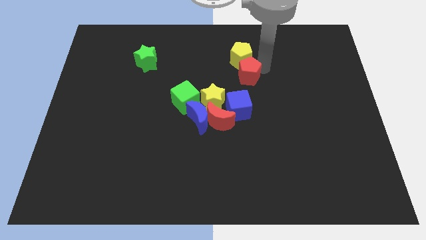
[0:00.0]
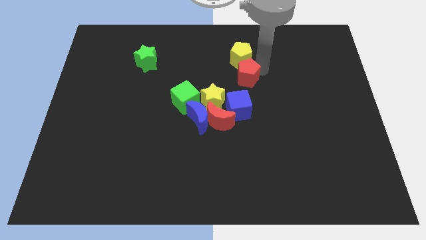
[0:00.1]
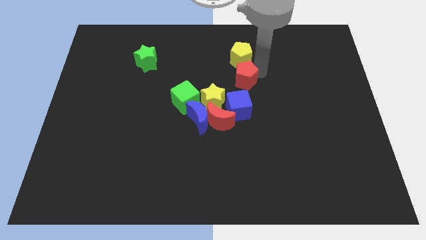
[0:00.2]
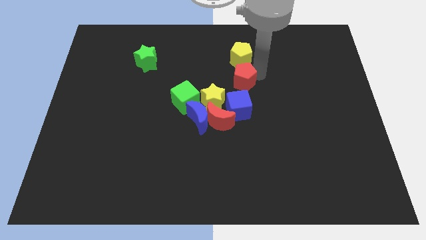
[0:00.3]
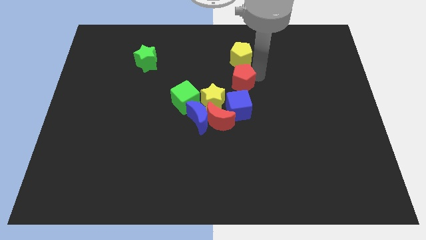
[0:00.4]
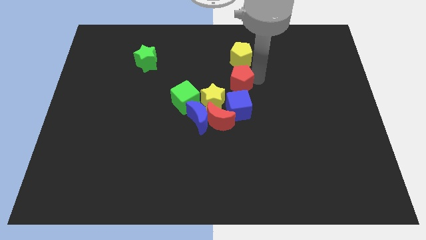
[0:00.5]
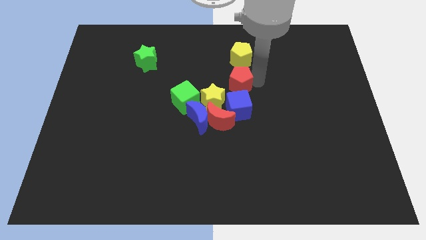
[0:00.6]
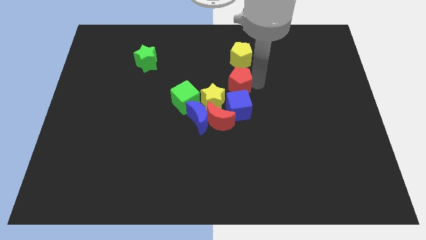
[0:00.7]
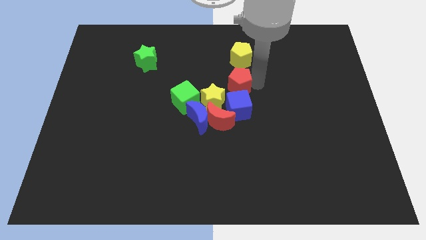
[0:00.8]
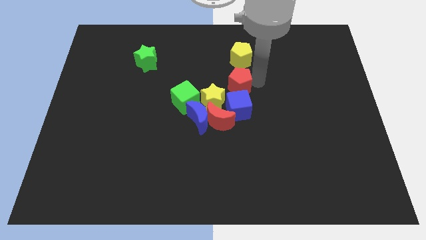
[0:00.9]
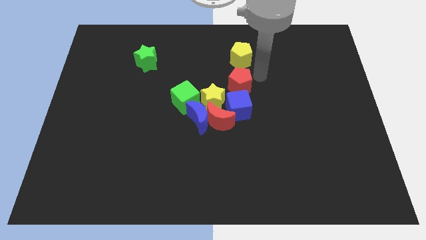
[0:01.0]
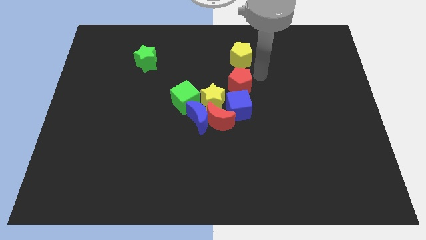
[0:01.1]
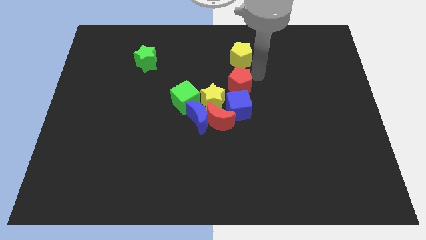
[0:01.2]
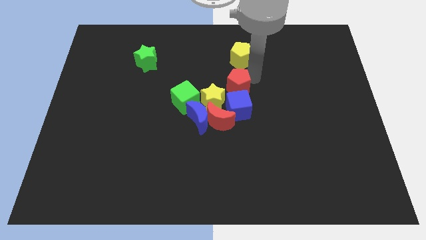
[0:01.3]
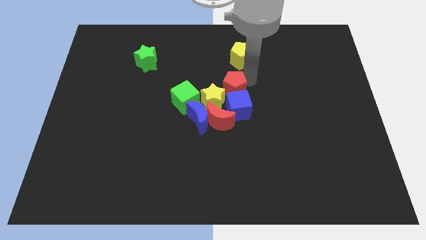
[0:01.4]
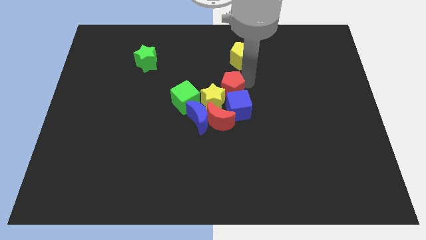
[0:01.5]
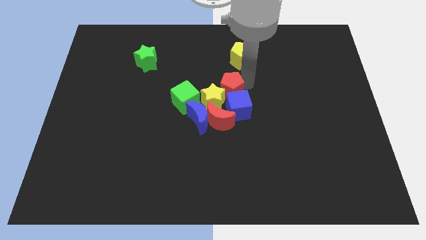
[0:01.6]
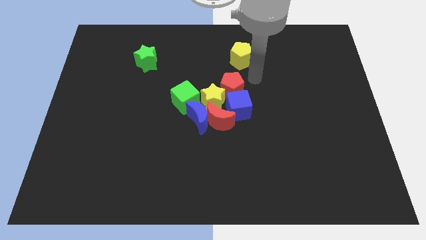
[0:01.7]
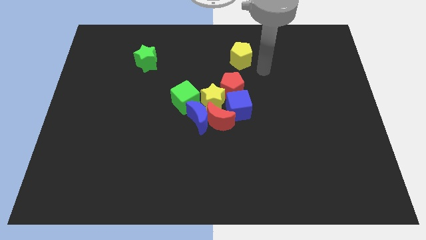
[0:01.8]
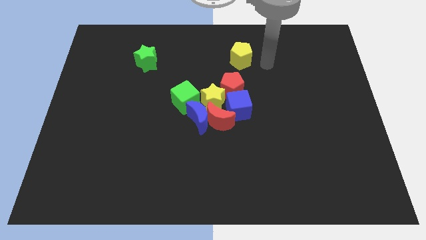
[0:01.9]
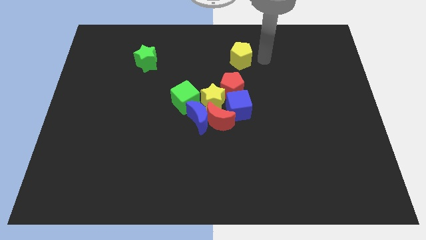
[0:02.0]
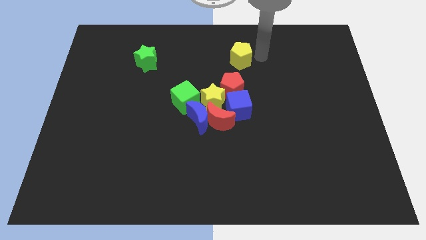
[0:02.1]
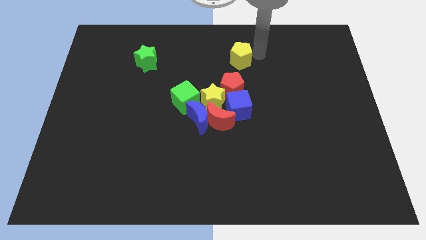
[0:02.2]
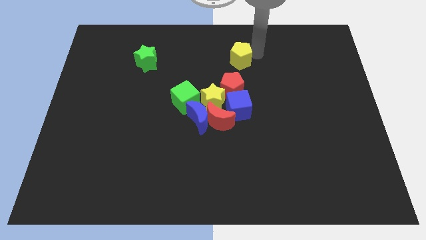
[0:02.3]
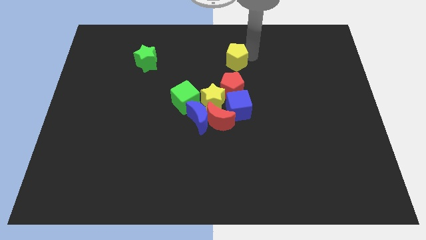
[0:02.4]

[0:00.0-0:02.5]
place the red pentagon in between yellow pentagon and blue cube

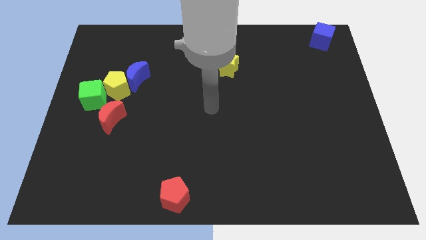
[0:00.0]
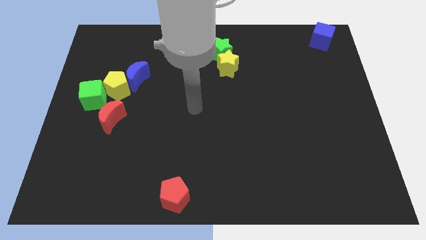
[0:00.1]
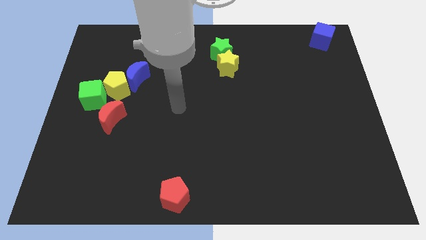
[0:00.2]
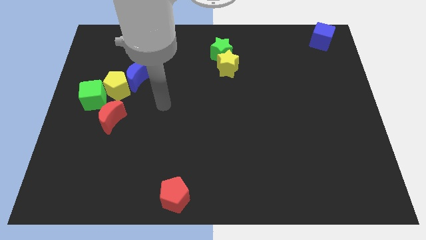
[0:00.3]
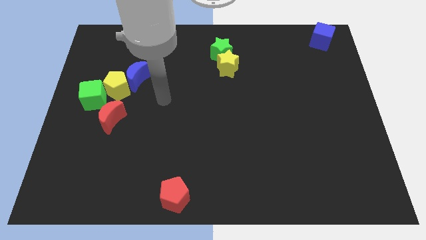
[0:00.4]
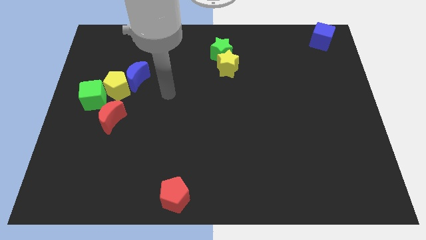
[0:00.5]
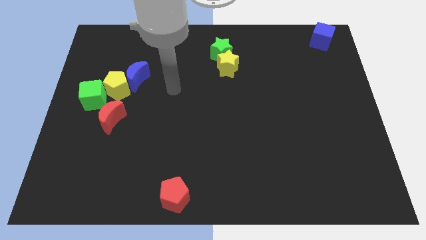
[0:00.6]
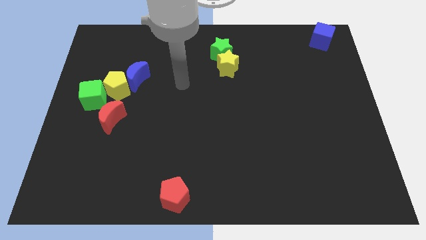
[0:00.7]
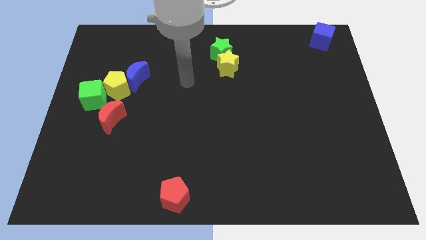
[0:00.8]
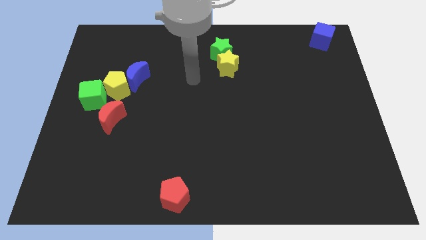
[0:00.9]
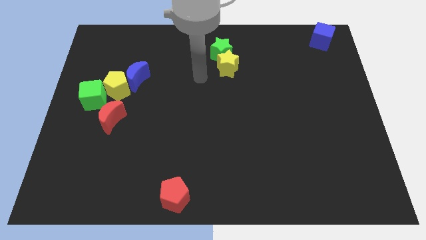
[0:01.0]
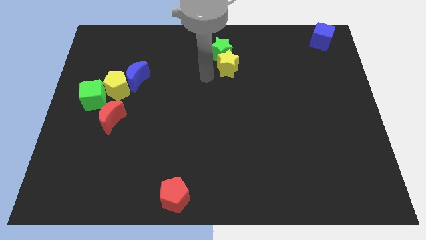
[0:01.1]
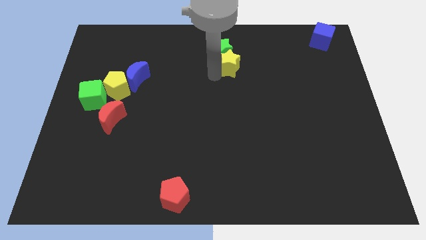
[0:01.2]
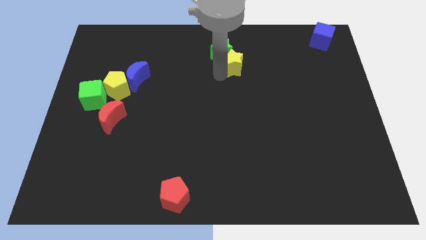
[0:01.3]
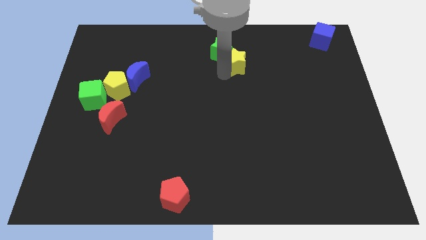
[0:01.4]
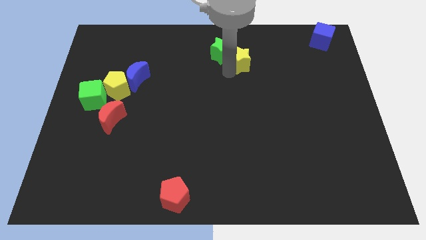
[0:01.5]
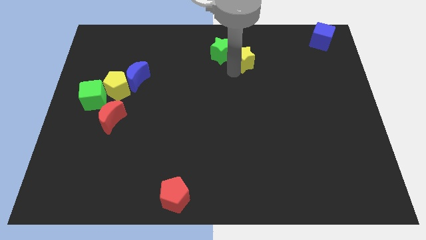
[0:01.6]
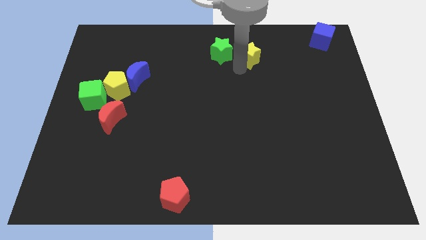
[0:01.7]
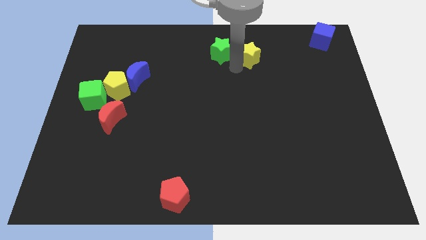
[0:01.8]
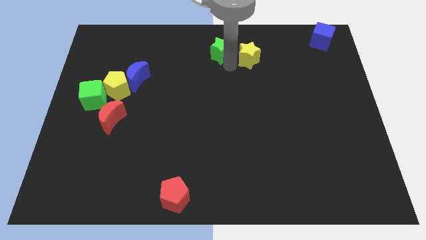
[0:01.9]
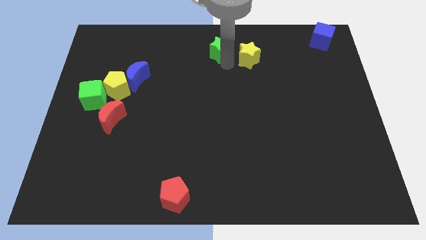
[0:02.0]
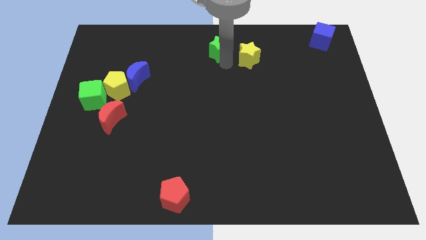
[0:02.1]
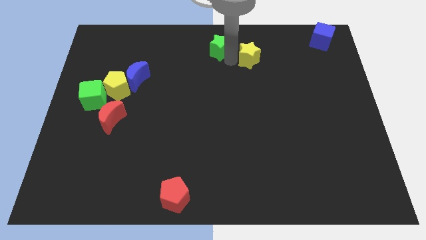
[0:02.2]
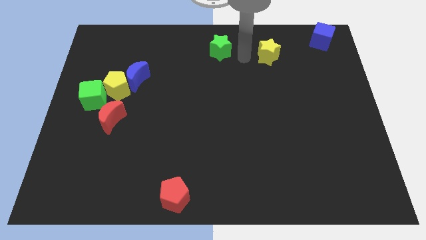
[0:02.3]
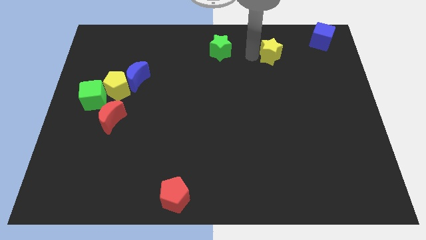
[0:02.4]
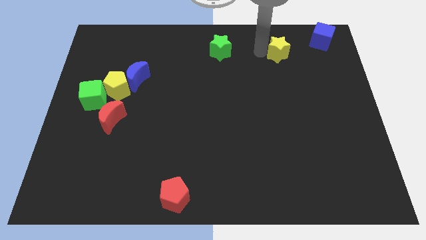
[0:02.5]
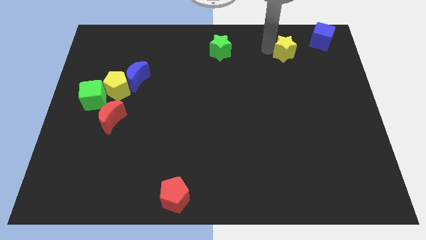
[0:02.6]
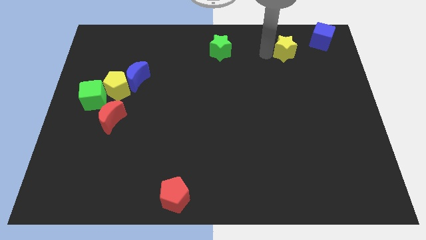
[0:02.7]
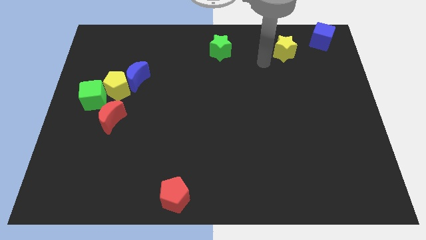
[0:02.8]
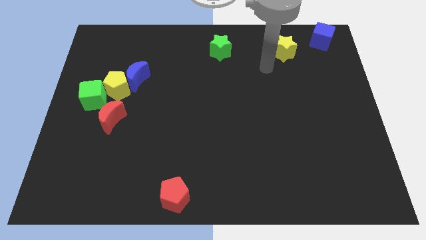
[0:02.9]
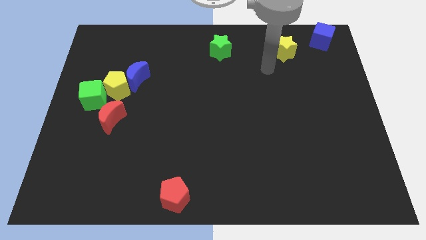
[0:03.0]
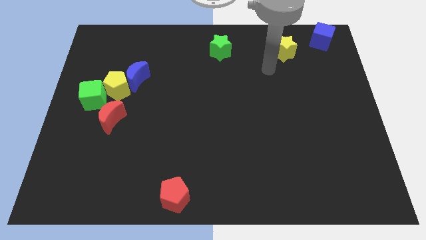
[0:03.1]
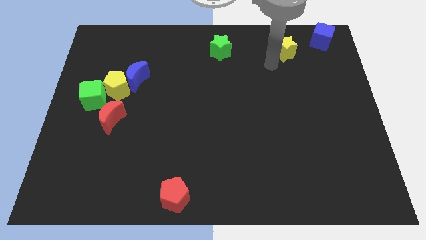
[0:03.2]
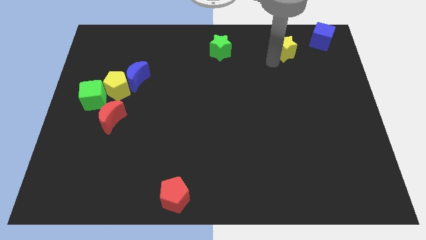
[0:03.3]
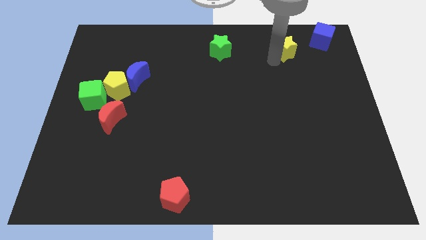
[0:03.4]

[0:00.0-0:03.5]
separate the yellow star and the green star

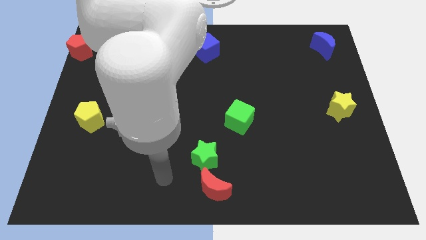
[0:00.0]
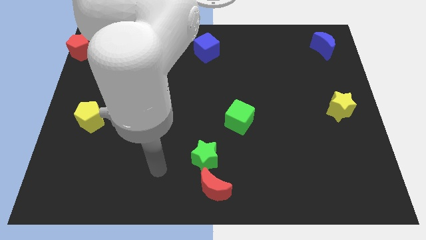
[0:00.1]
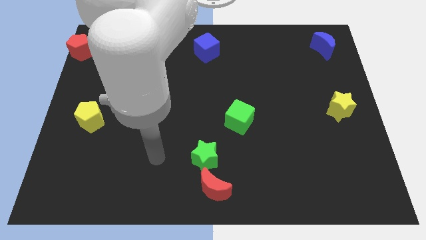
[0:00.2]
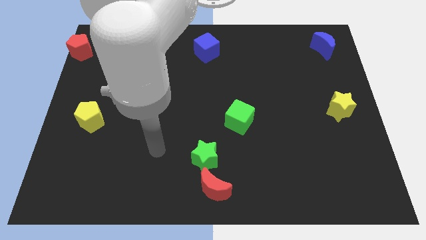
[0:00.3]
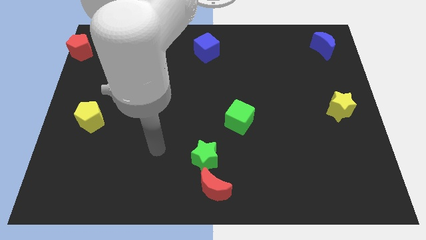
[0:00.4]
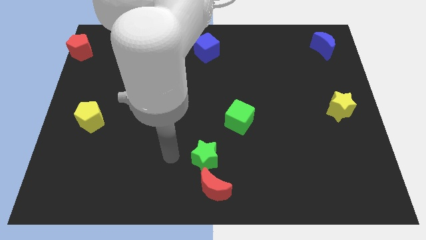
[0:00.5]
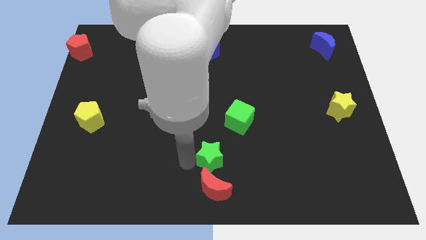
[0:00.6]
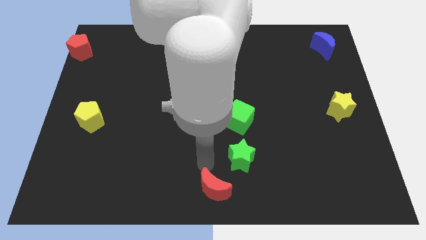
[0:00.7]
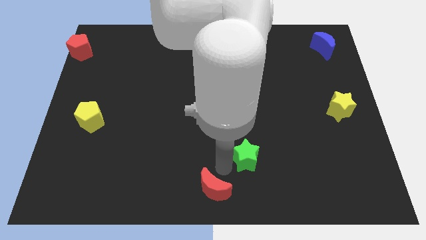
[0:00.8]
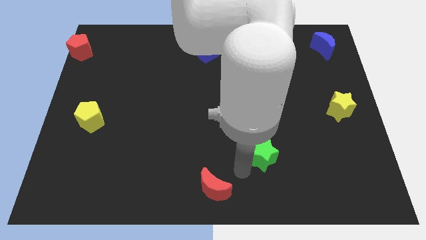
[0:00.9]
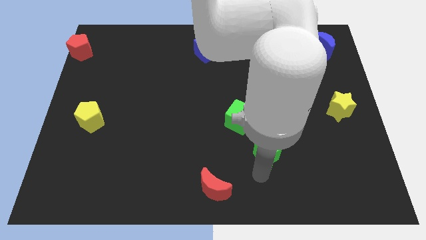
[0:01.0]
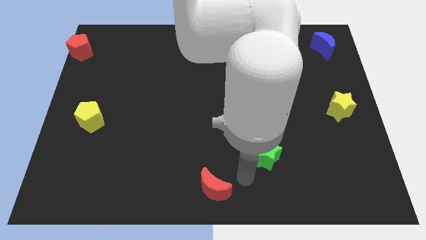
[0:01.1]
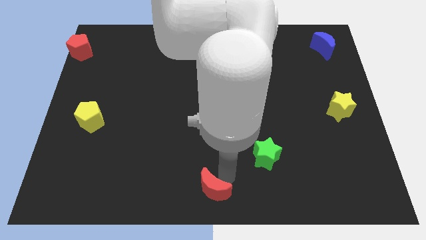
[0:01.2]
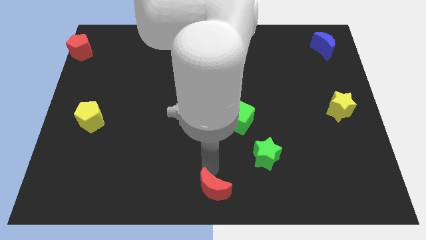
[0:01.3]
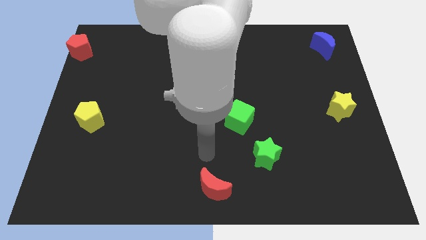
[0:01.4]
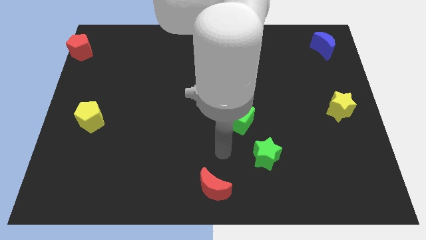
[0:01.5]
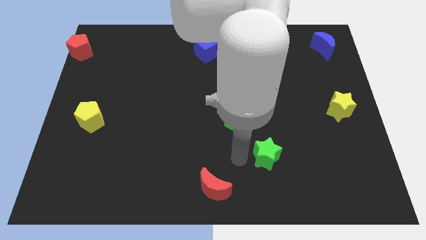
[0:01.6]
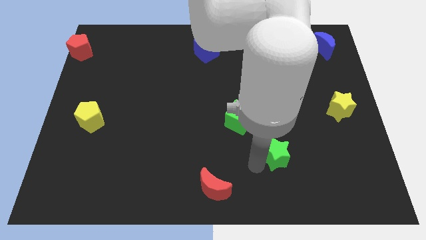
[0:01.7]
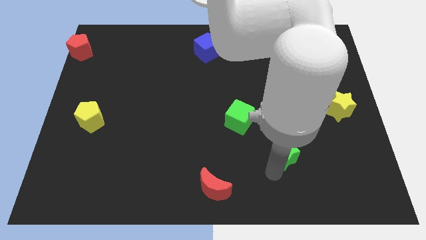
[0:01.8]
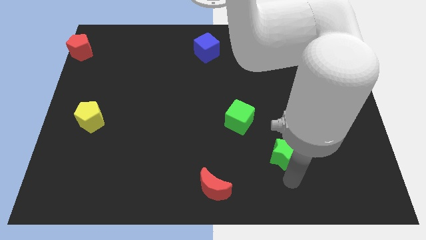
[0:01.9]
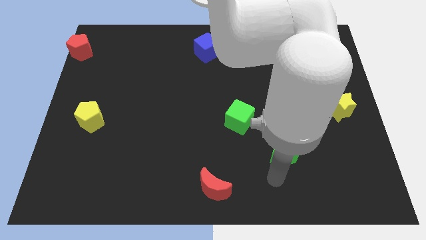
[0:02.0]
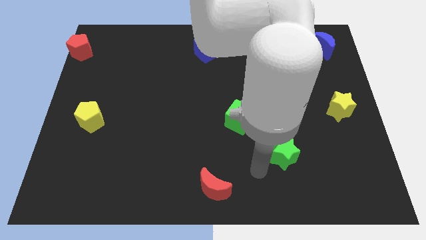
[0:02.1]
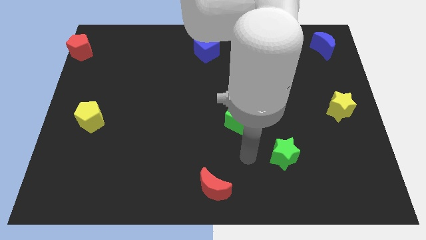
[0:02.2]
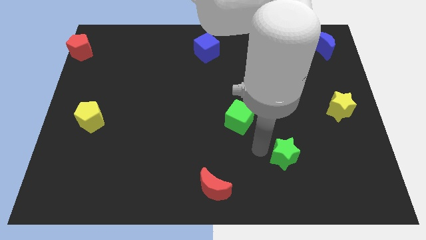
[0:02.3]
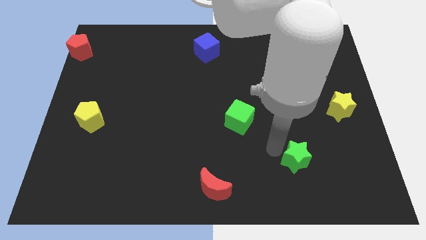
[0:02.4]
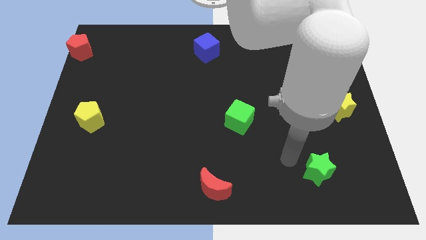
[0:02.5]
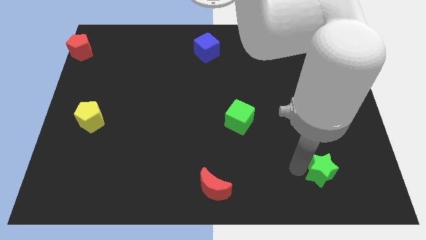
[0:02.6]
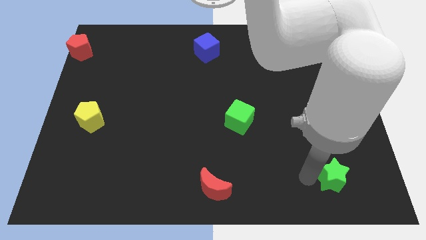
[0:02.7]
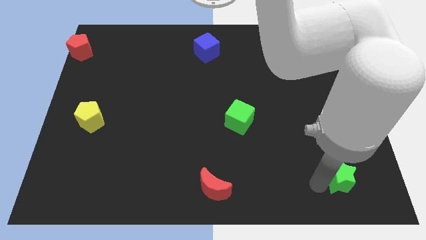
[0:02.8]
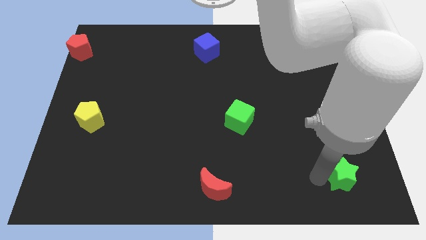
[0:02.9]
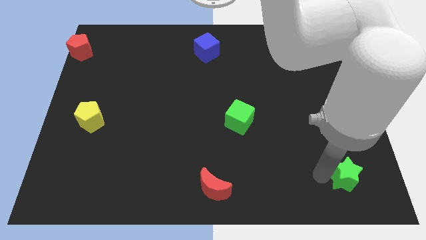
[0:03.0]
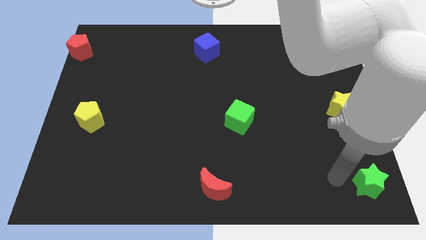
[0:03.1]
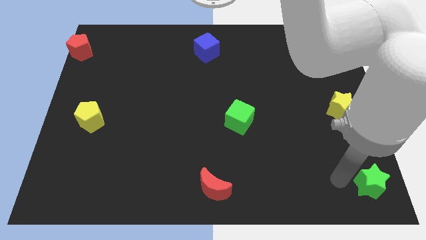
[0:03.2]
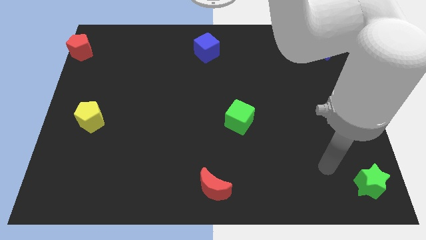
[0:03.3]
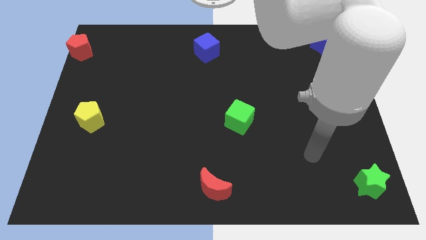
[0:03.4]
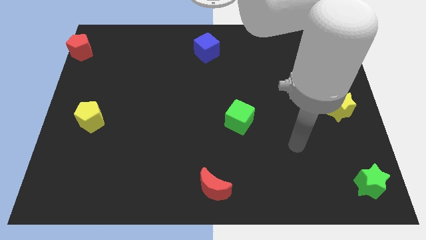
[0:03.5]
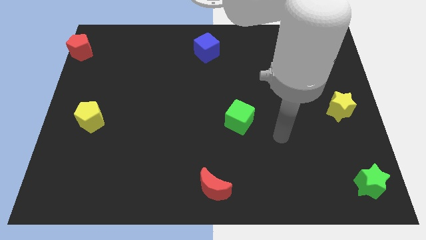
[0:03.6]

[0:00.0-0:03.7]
push green star to the bottom right corner of the board
